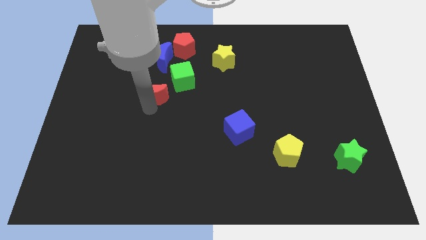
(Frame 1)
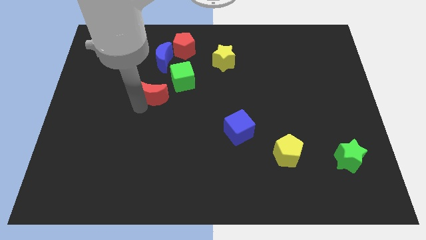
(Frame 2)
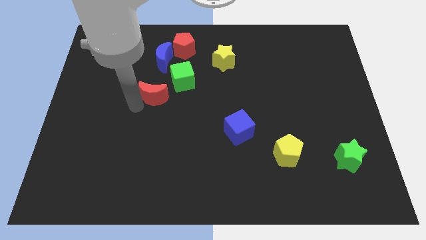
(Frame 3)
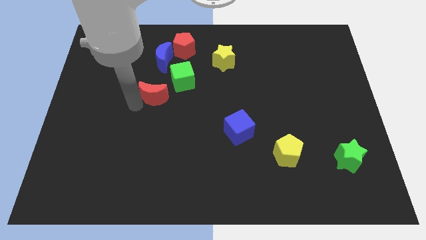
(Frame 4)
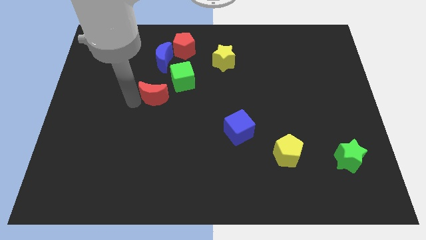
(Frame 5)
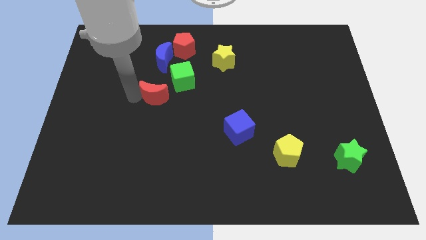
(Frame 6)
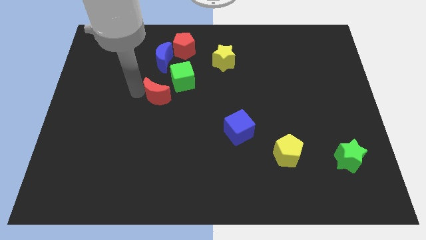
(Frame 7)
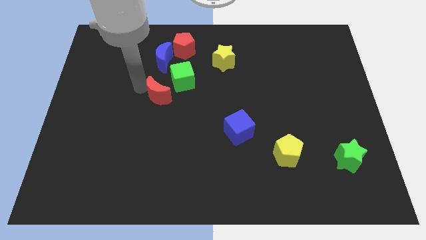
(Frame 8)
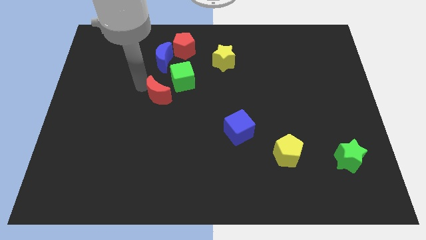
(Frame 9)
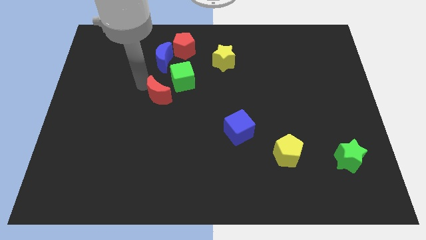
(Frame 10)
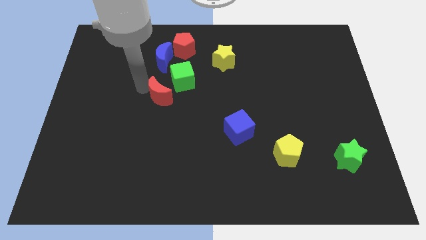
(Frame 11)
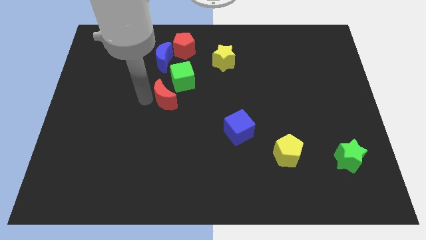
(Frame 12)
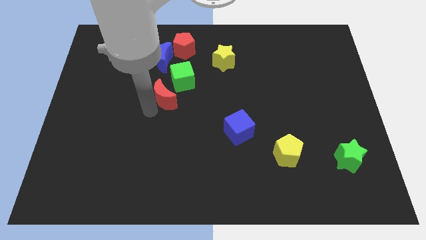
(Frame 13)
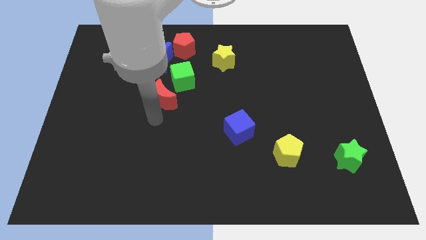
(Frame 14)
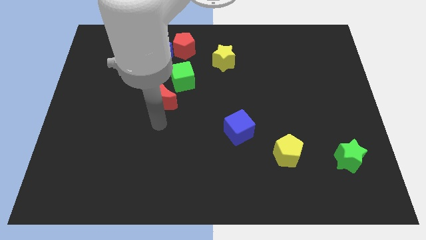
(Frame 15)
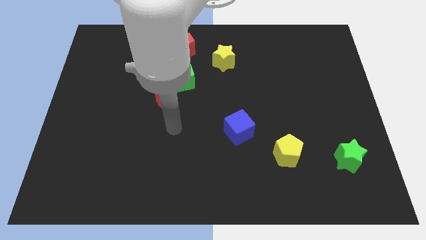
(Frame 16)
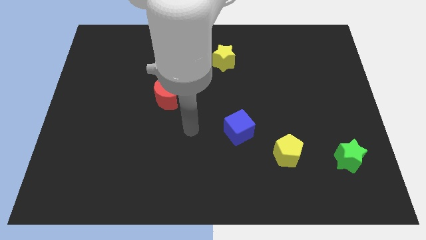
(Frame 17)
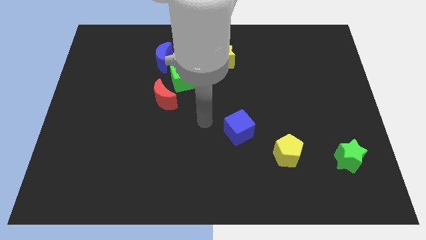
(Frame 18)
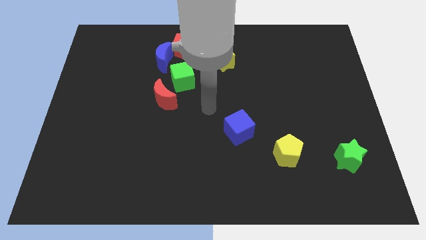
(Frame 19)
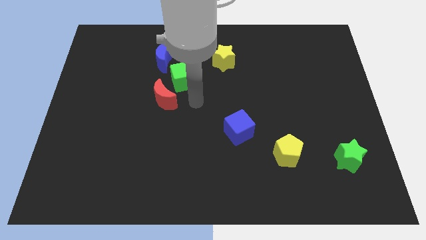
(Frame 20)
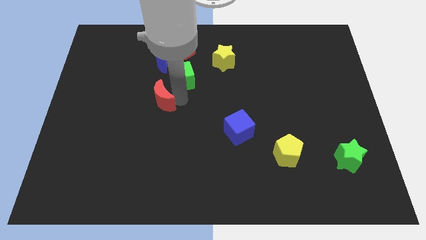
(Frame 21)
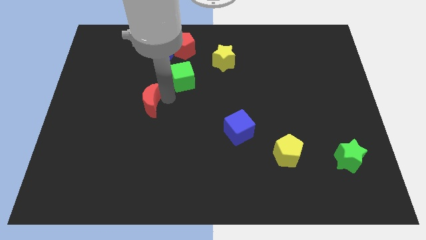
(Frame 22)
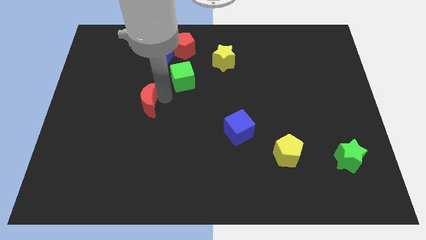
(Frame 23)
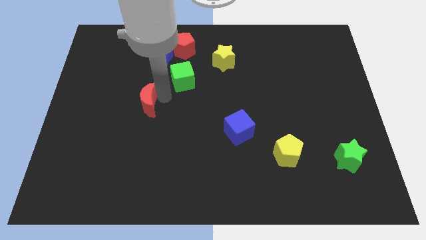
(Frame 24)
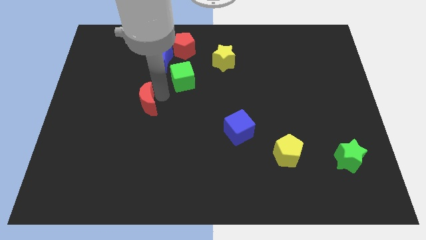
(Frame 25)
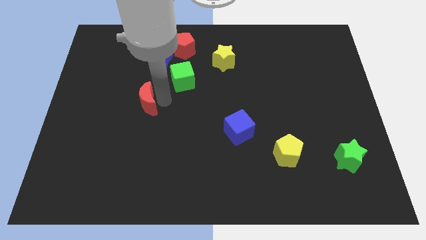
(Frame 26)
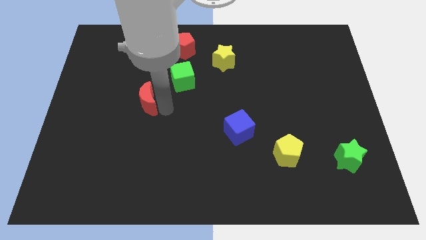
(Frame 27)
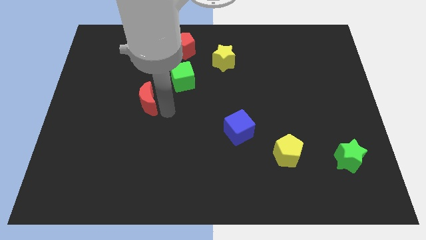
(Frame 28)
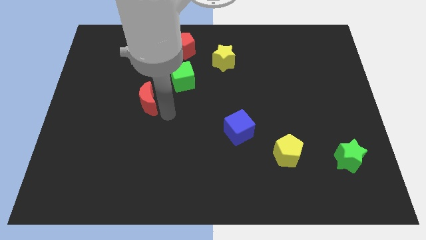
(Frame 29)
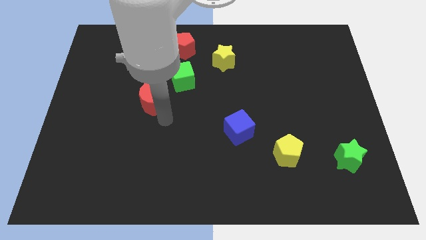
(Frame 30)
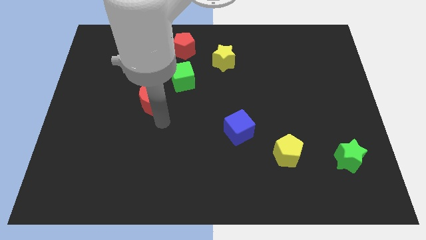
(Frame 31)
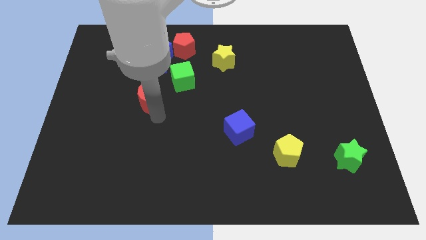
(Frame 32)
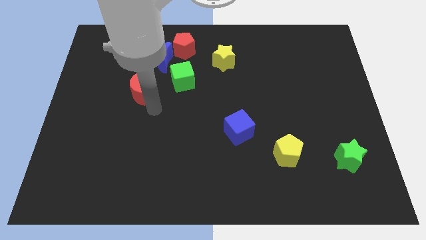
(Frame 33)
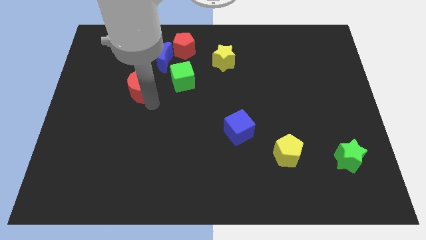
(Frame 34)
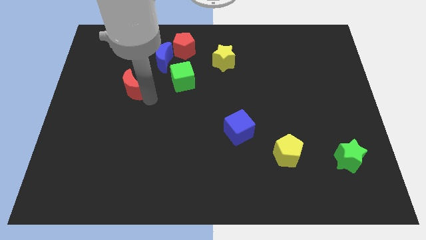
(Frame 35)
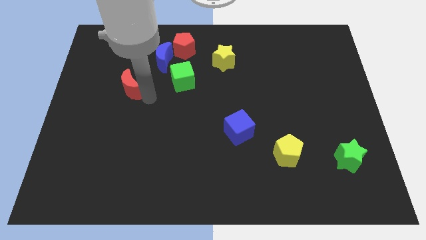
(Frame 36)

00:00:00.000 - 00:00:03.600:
move the red crescent parallel left to the green cube

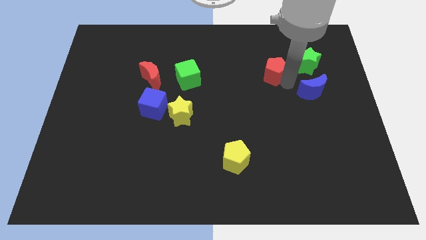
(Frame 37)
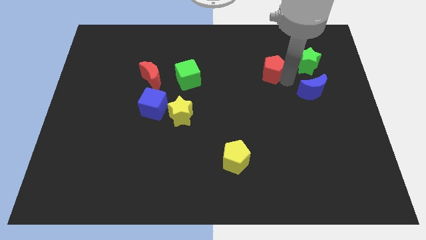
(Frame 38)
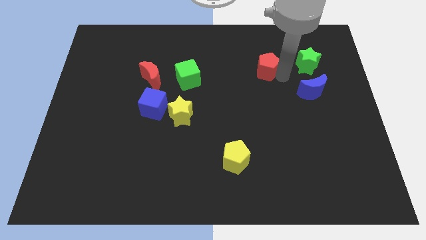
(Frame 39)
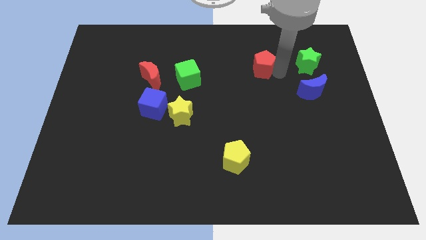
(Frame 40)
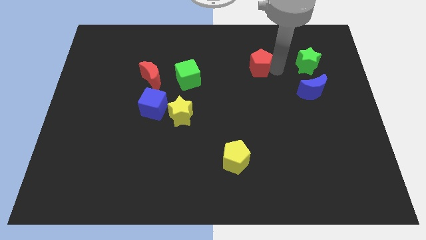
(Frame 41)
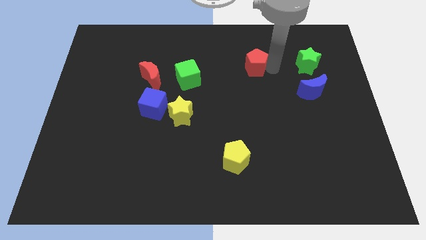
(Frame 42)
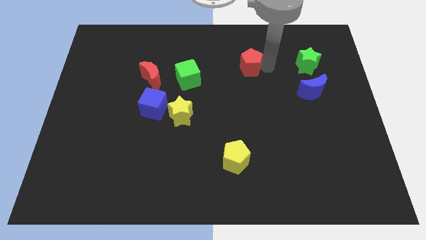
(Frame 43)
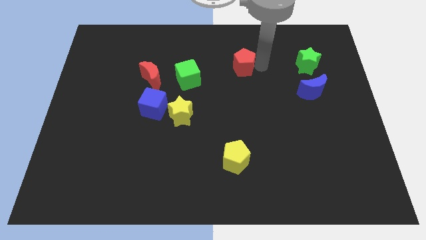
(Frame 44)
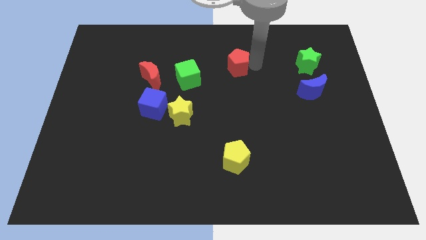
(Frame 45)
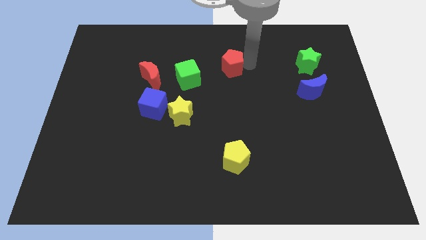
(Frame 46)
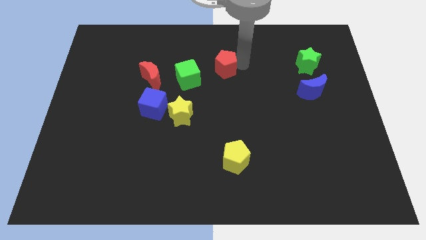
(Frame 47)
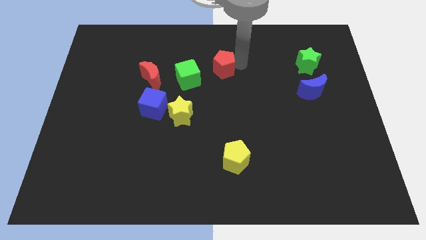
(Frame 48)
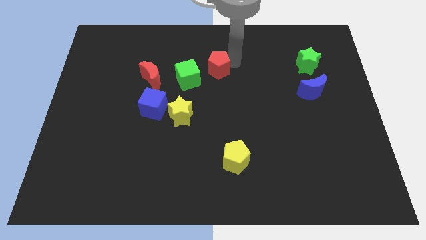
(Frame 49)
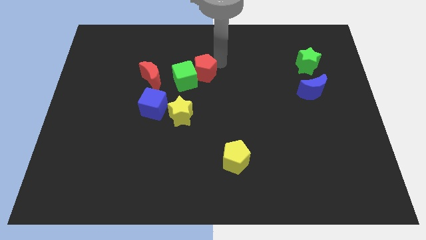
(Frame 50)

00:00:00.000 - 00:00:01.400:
push the red pentagon into the green cube

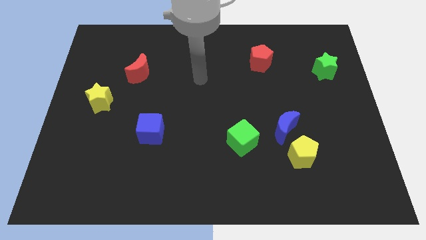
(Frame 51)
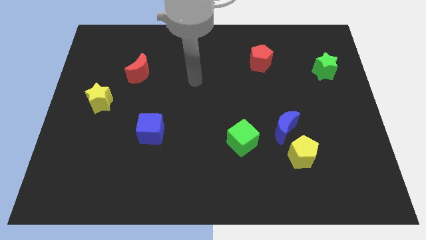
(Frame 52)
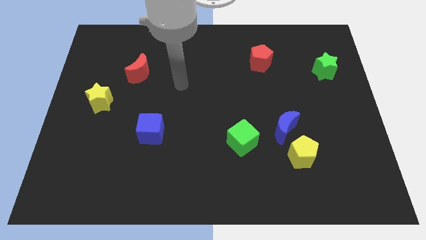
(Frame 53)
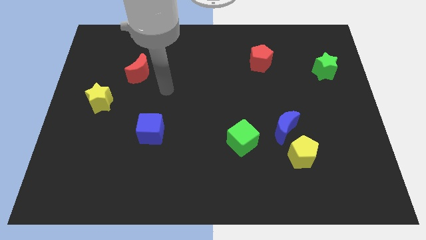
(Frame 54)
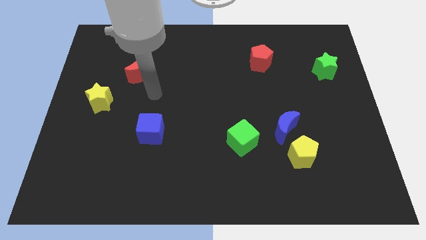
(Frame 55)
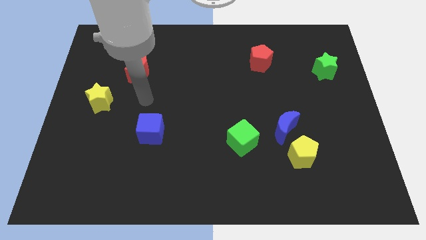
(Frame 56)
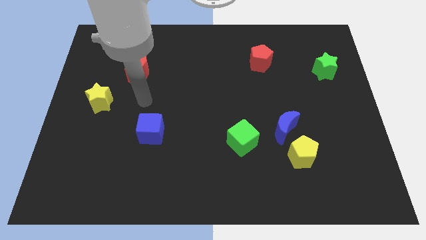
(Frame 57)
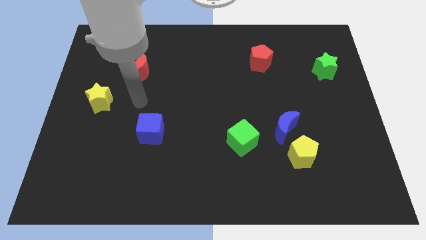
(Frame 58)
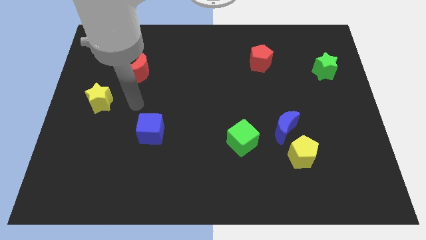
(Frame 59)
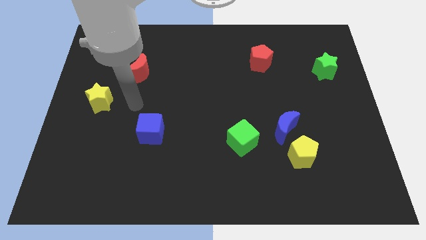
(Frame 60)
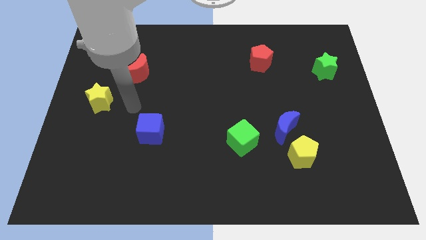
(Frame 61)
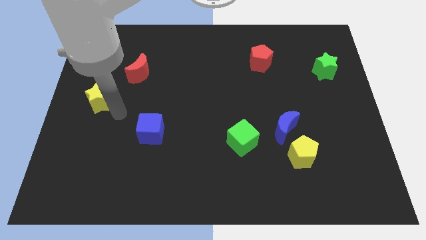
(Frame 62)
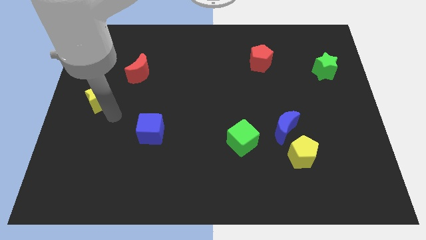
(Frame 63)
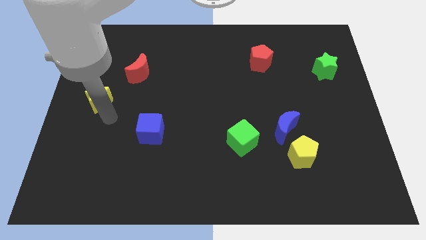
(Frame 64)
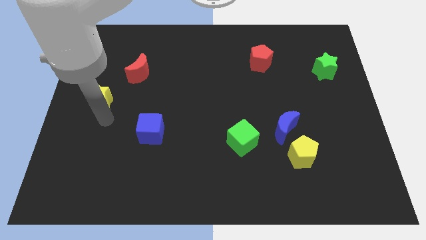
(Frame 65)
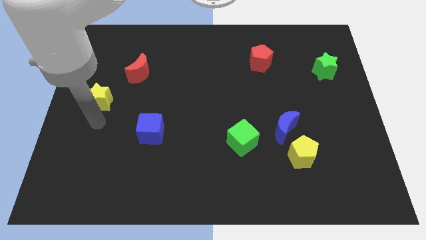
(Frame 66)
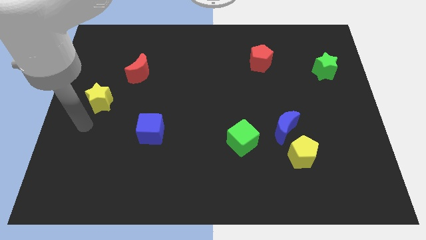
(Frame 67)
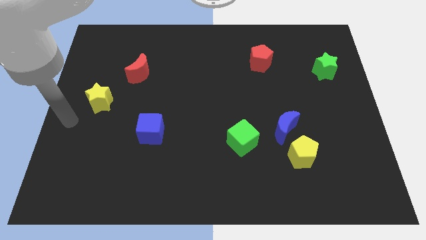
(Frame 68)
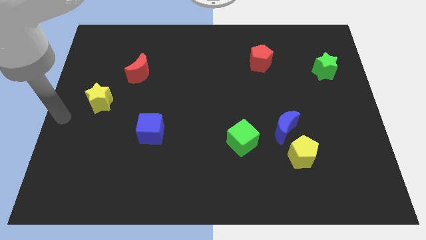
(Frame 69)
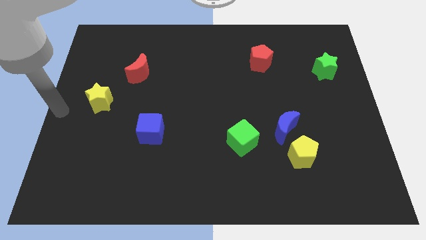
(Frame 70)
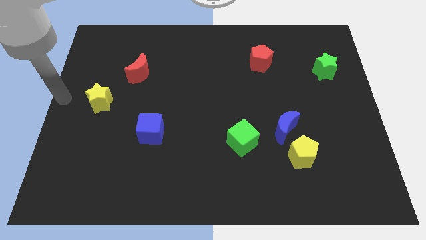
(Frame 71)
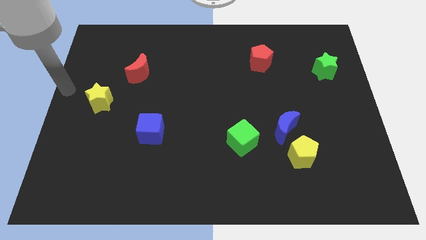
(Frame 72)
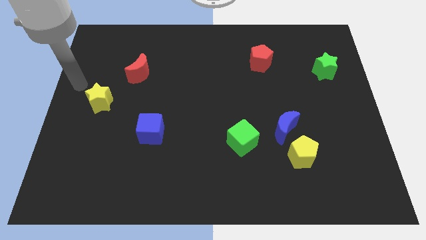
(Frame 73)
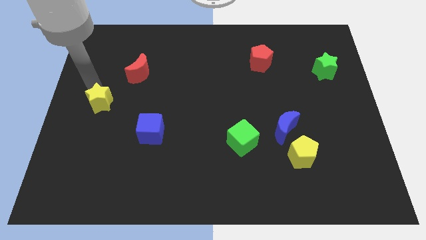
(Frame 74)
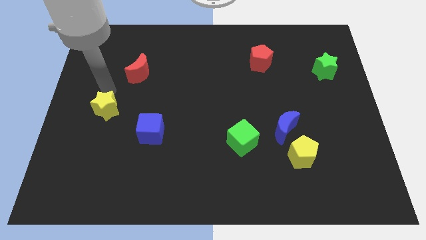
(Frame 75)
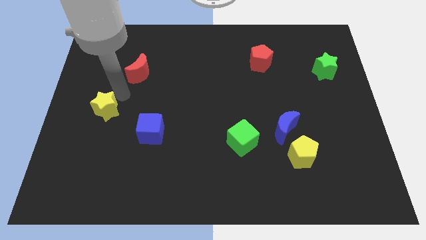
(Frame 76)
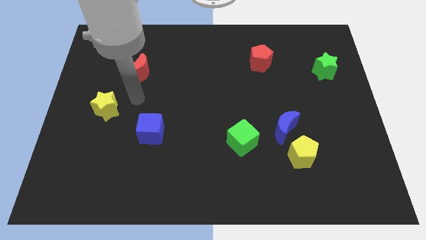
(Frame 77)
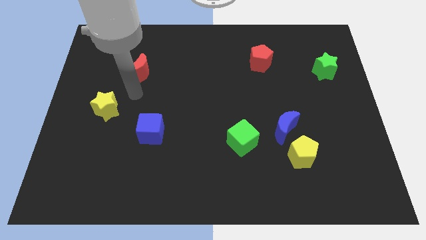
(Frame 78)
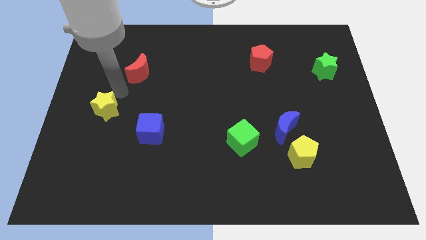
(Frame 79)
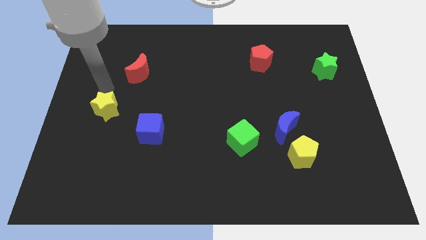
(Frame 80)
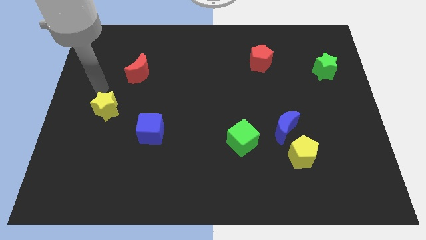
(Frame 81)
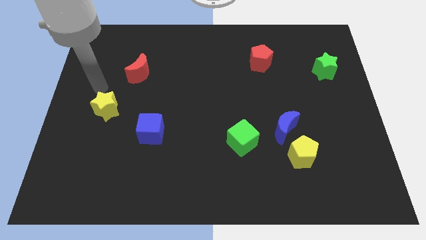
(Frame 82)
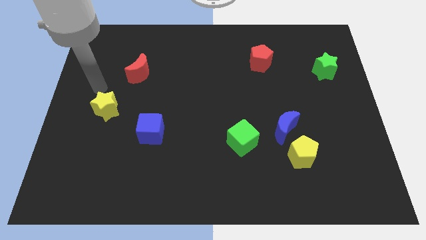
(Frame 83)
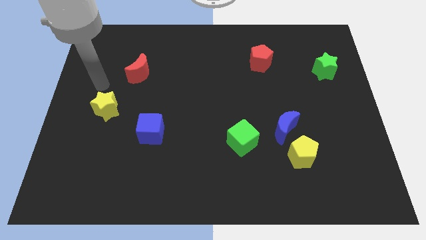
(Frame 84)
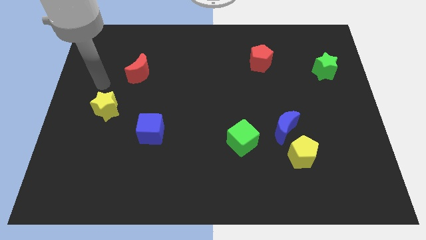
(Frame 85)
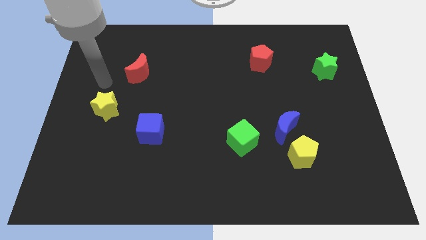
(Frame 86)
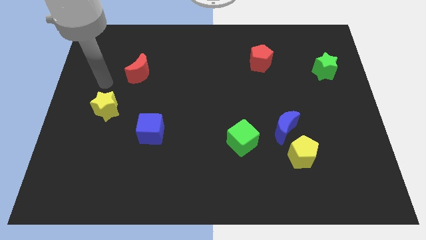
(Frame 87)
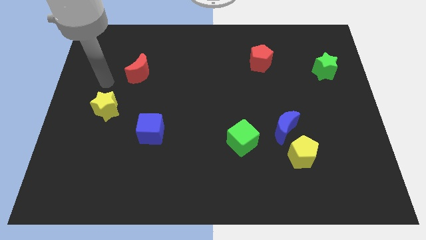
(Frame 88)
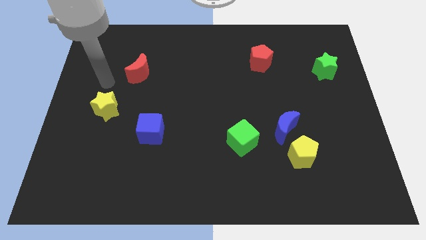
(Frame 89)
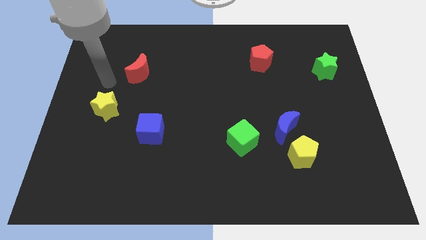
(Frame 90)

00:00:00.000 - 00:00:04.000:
slightly push the yellow star to the left center
